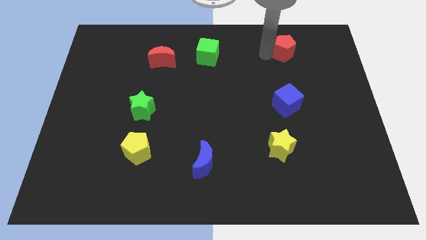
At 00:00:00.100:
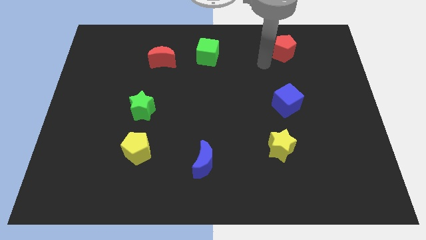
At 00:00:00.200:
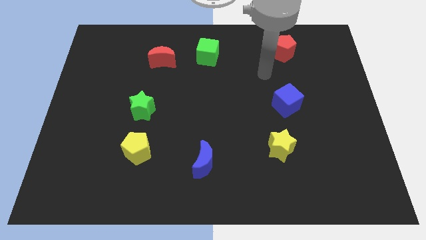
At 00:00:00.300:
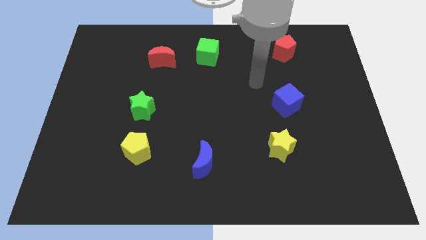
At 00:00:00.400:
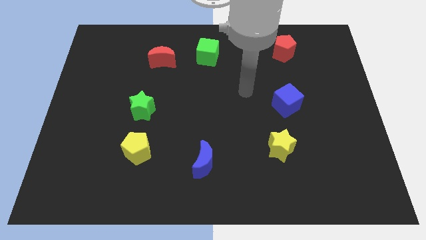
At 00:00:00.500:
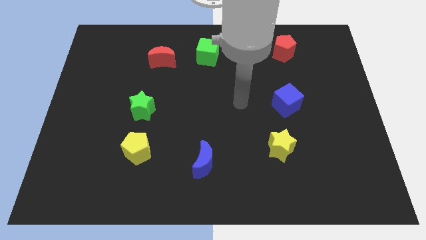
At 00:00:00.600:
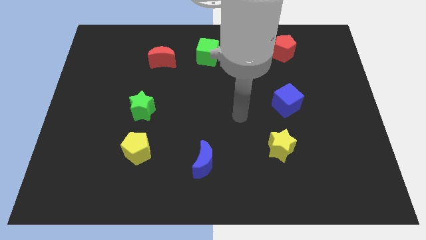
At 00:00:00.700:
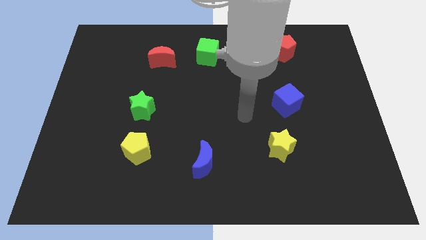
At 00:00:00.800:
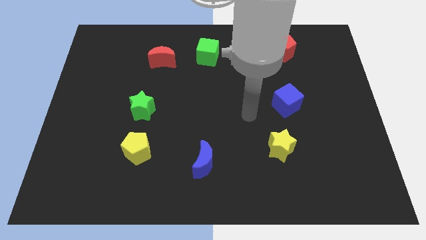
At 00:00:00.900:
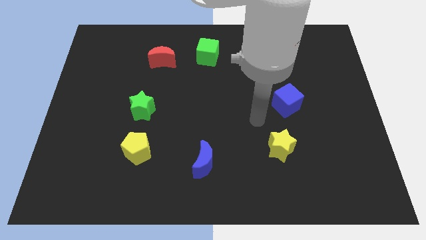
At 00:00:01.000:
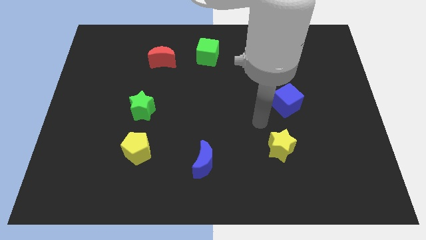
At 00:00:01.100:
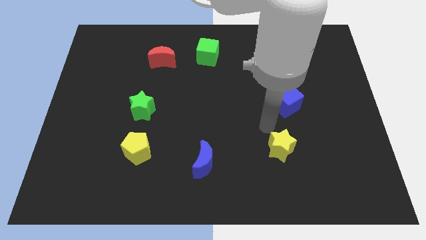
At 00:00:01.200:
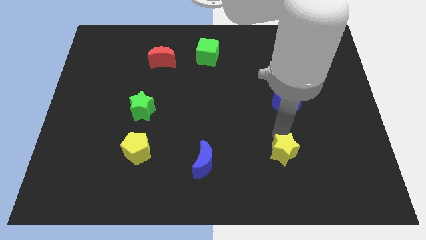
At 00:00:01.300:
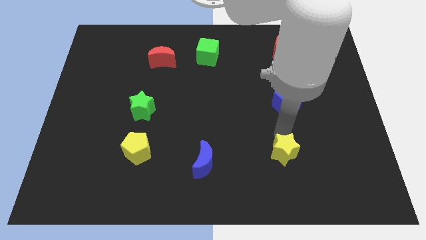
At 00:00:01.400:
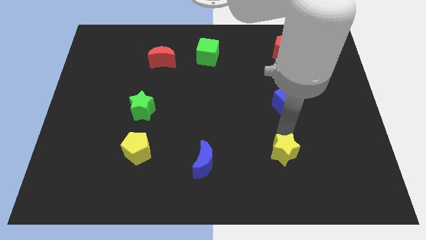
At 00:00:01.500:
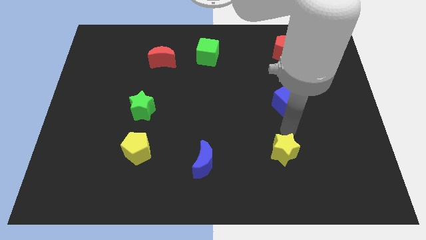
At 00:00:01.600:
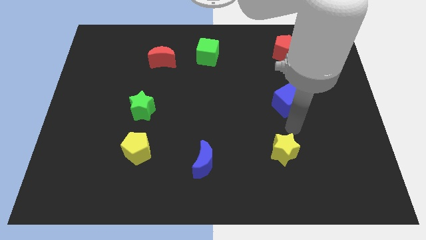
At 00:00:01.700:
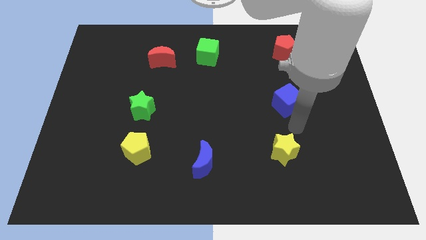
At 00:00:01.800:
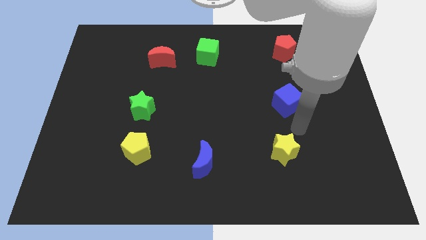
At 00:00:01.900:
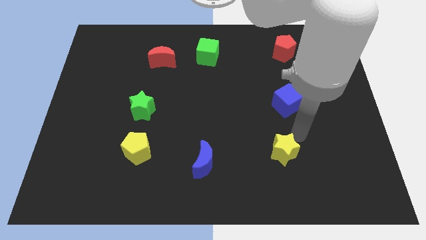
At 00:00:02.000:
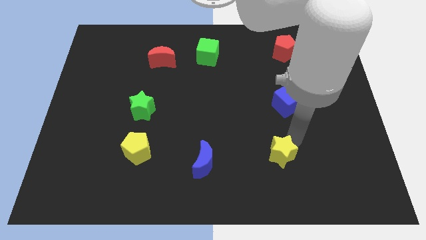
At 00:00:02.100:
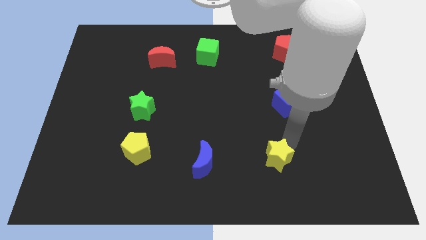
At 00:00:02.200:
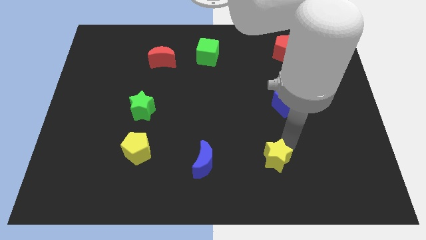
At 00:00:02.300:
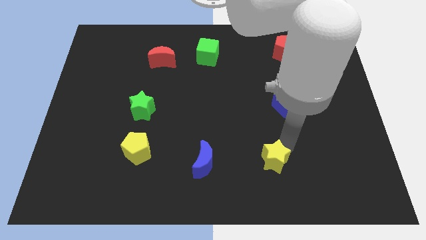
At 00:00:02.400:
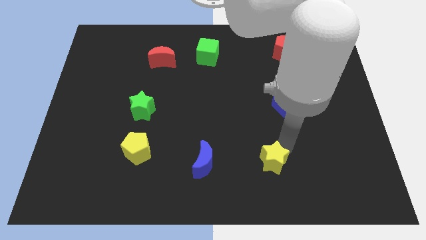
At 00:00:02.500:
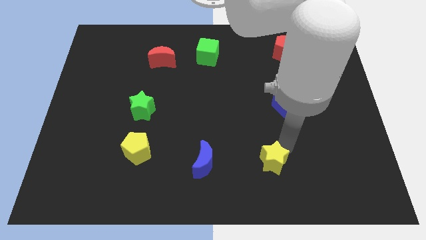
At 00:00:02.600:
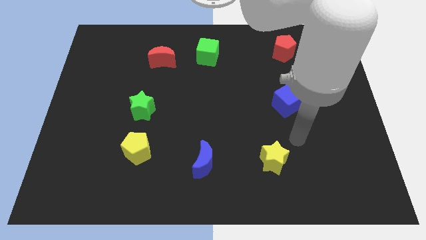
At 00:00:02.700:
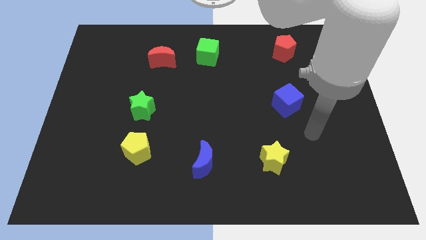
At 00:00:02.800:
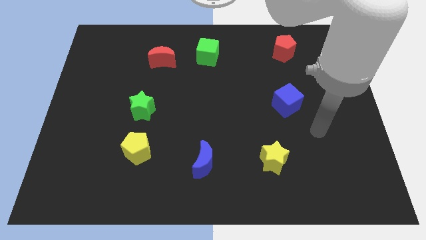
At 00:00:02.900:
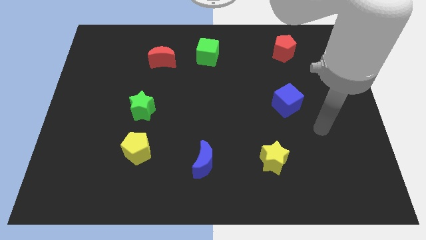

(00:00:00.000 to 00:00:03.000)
adjust the yellow star to the right side of the blue crescent

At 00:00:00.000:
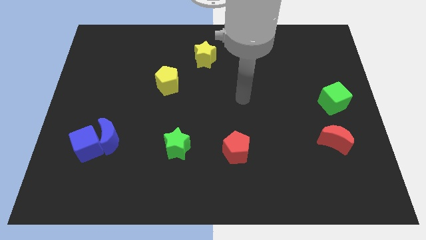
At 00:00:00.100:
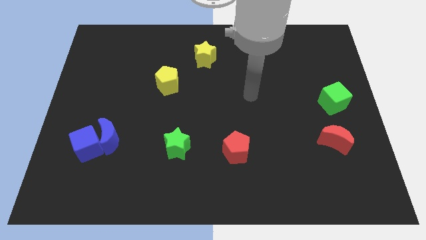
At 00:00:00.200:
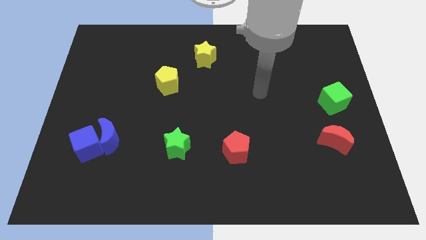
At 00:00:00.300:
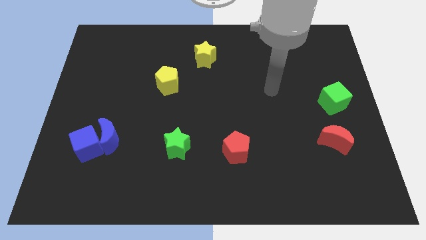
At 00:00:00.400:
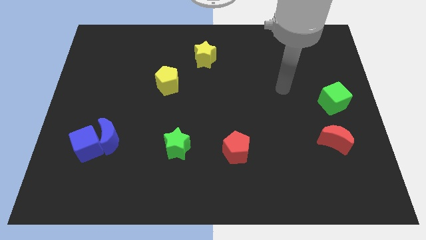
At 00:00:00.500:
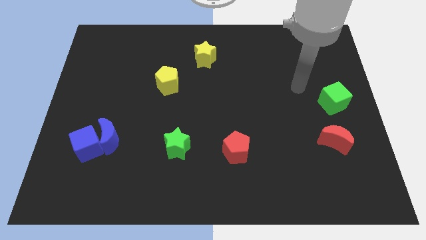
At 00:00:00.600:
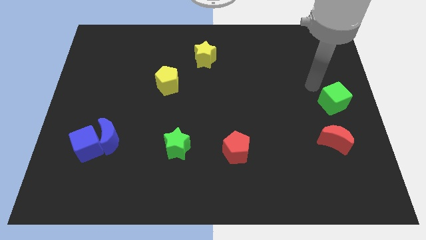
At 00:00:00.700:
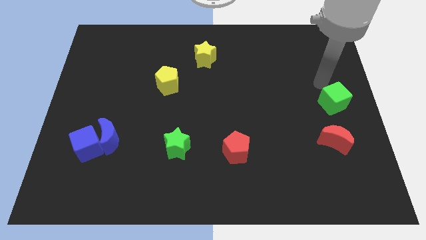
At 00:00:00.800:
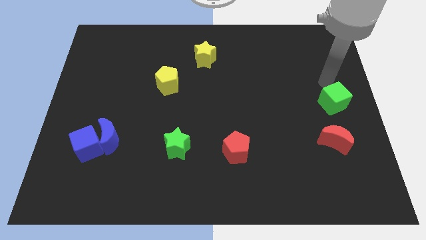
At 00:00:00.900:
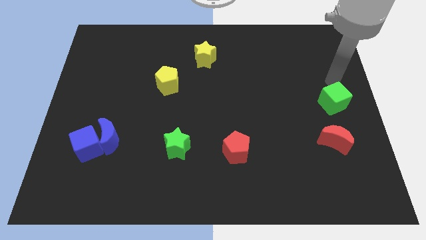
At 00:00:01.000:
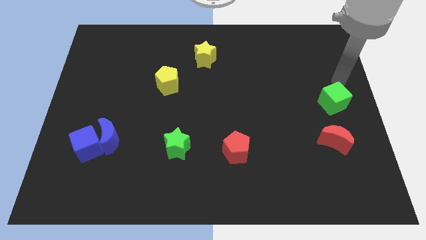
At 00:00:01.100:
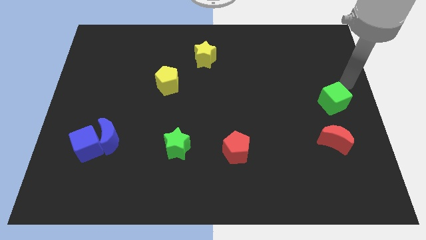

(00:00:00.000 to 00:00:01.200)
move arm towards the green cube on the right center of the board

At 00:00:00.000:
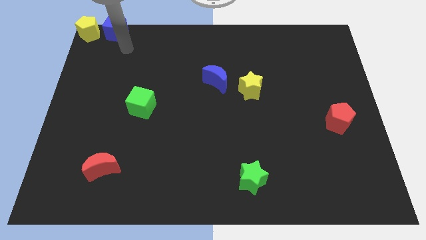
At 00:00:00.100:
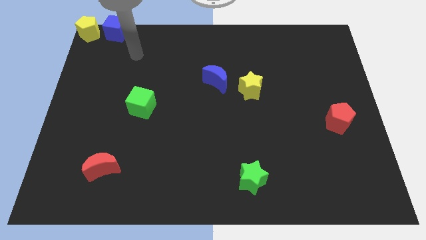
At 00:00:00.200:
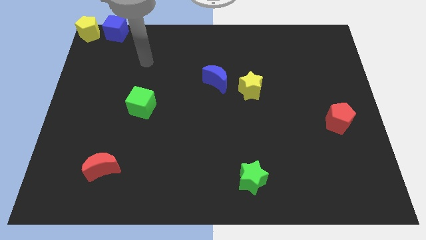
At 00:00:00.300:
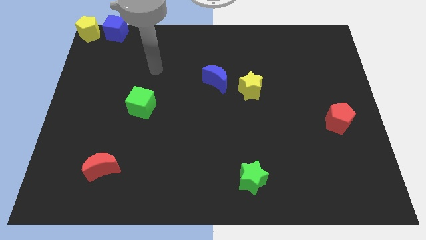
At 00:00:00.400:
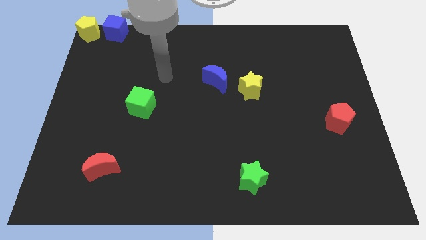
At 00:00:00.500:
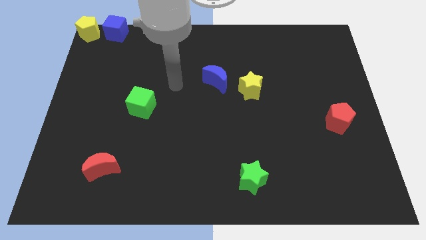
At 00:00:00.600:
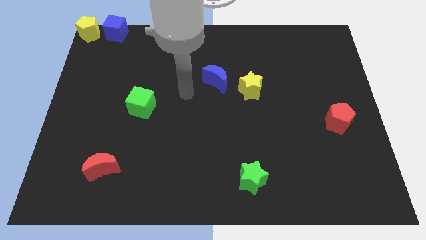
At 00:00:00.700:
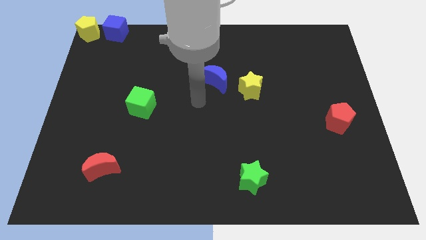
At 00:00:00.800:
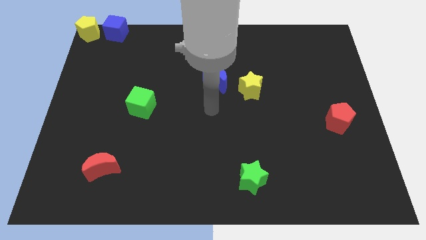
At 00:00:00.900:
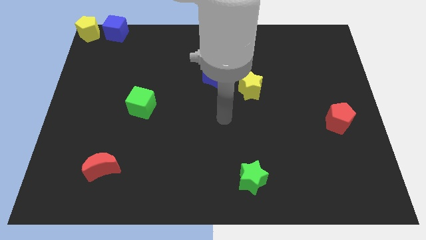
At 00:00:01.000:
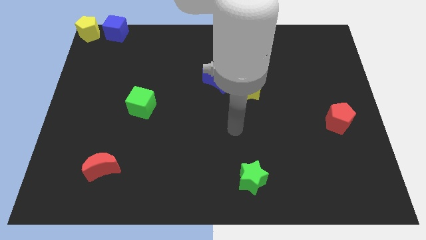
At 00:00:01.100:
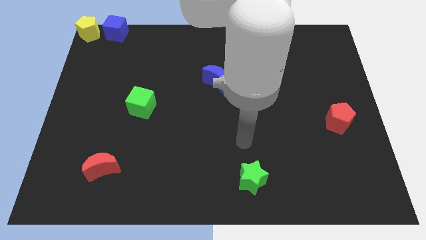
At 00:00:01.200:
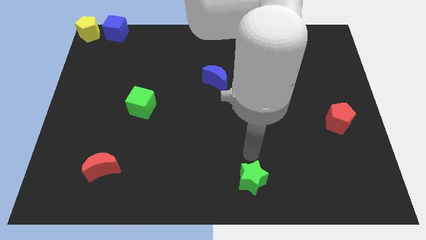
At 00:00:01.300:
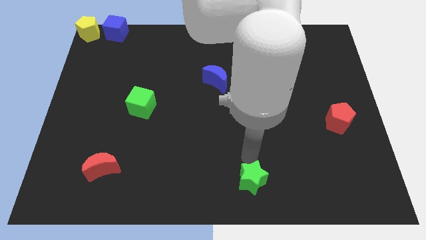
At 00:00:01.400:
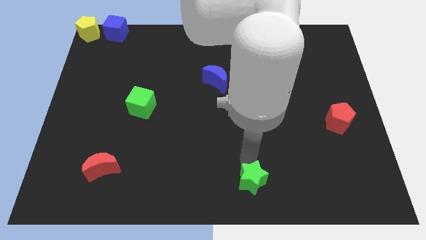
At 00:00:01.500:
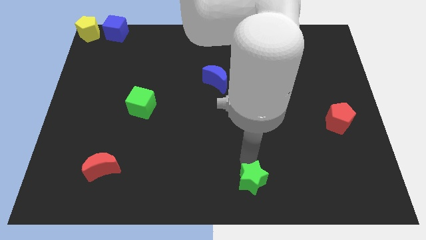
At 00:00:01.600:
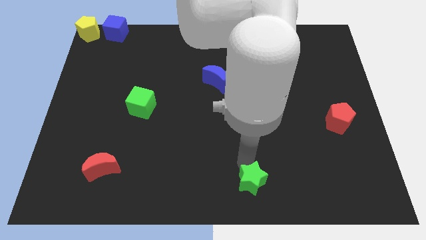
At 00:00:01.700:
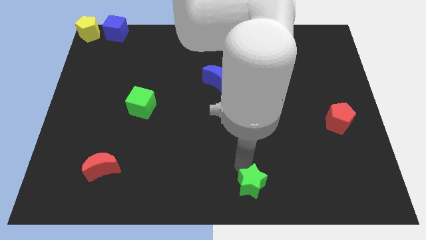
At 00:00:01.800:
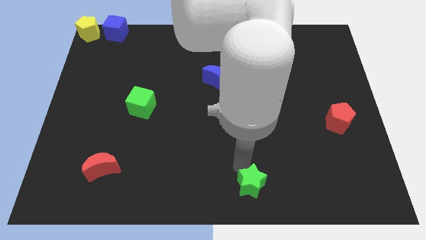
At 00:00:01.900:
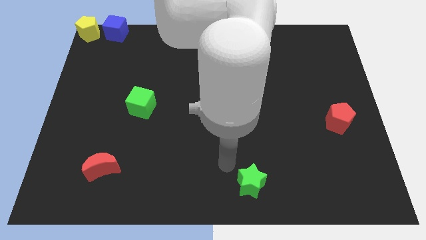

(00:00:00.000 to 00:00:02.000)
tap at the top side of the green star

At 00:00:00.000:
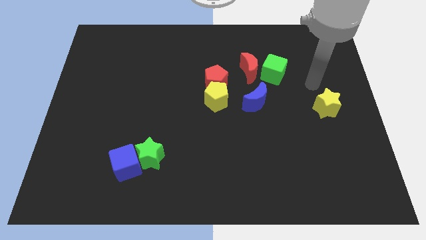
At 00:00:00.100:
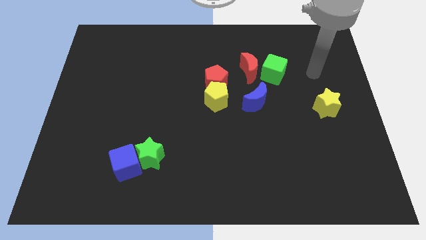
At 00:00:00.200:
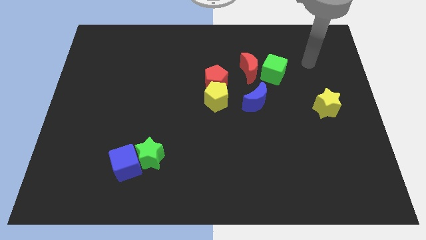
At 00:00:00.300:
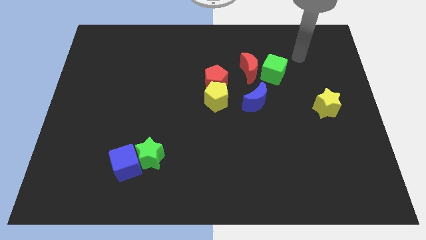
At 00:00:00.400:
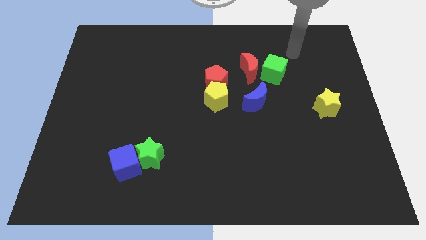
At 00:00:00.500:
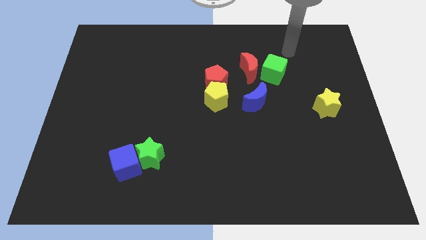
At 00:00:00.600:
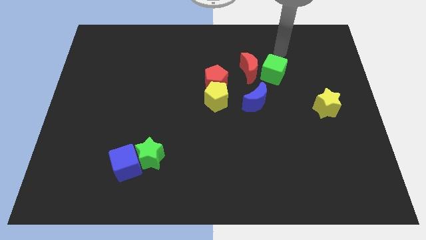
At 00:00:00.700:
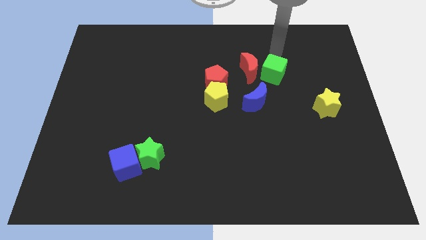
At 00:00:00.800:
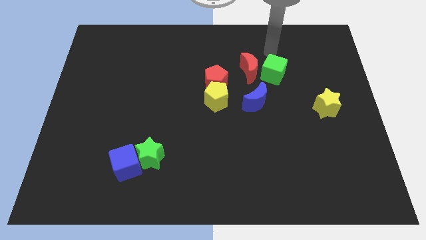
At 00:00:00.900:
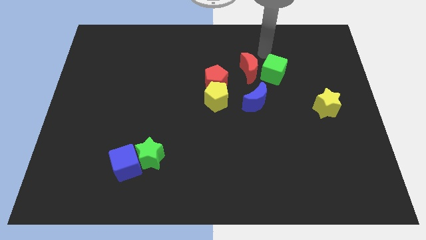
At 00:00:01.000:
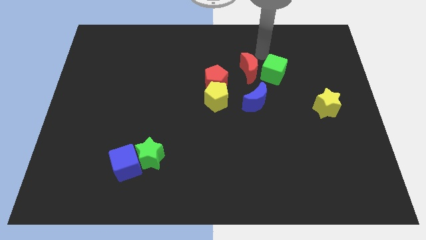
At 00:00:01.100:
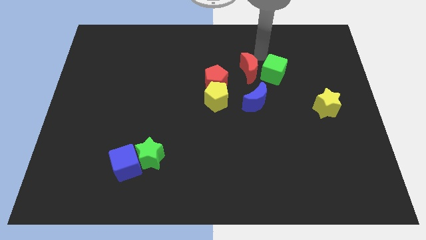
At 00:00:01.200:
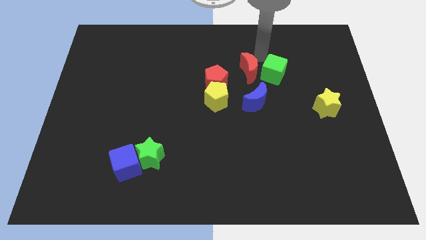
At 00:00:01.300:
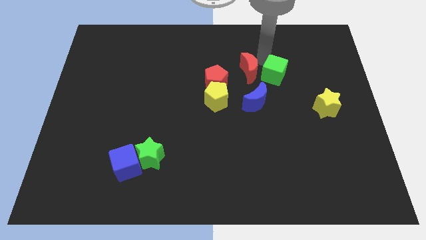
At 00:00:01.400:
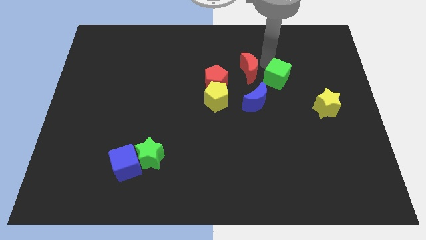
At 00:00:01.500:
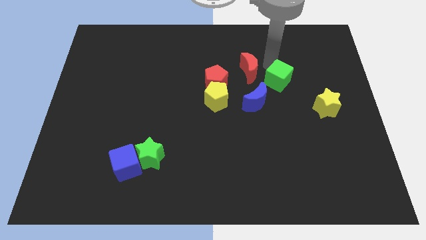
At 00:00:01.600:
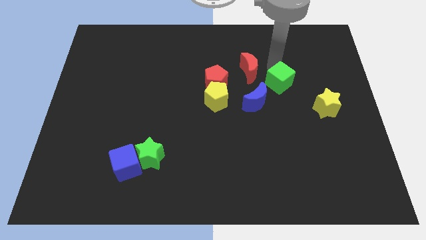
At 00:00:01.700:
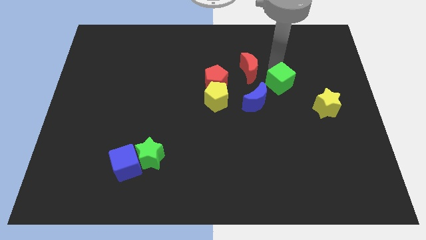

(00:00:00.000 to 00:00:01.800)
push the green cube slightly downward

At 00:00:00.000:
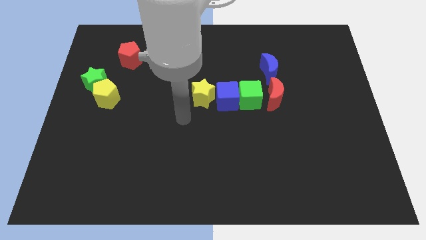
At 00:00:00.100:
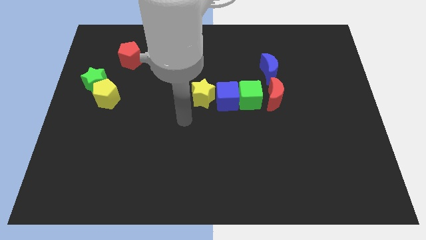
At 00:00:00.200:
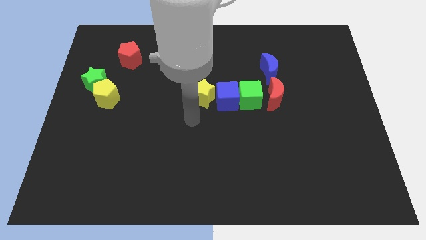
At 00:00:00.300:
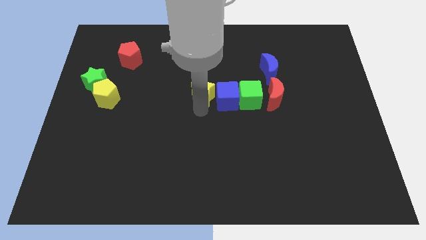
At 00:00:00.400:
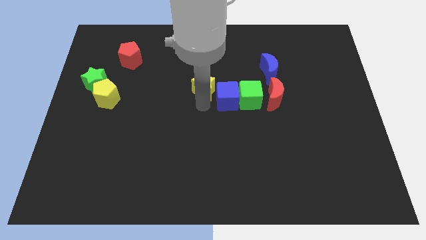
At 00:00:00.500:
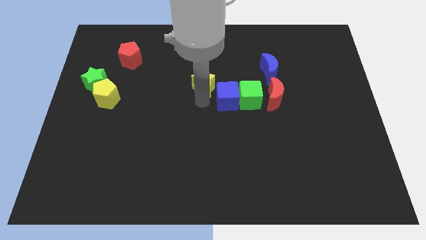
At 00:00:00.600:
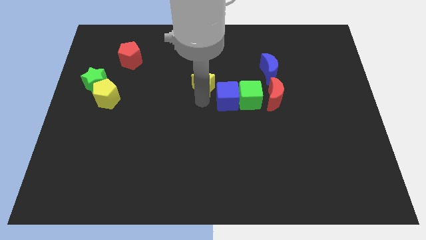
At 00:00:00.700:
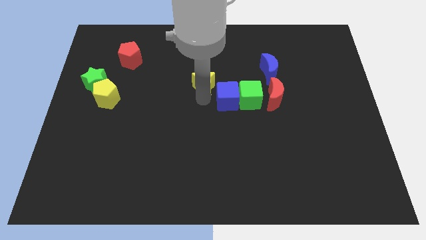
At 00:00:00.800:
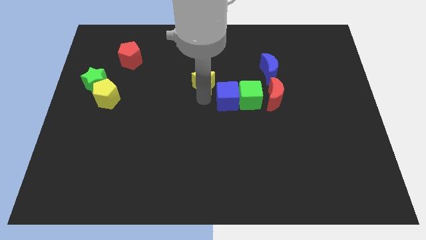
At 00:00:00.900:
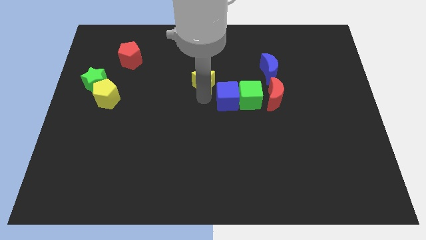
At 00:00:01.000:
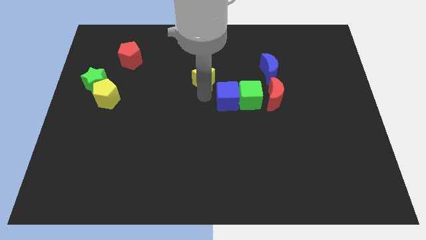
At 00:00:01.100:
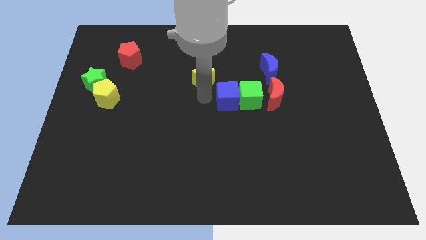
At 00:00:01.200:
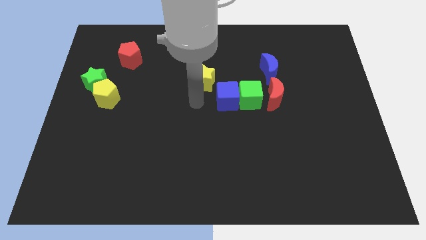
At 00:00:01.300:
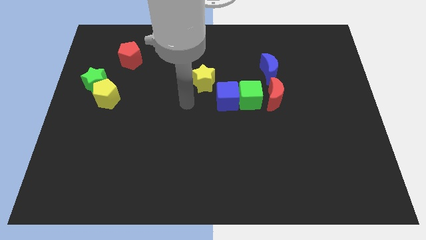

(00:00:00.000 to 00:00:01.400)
separate the yellow star from the horizontal line of blocks
